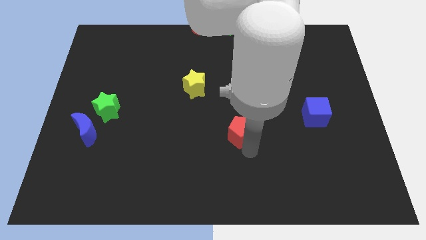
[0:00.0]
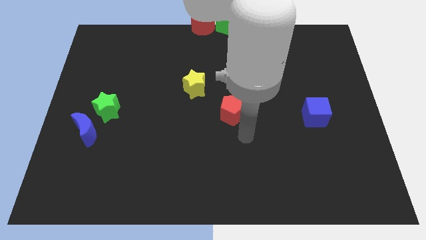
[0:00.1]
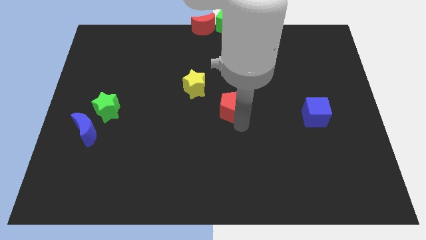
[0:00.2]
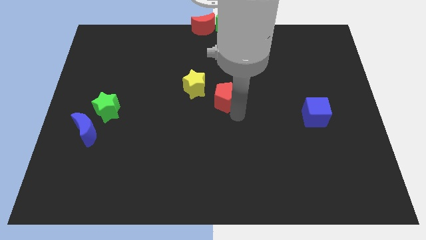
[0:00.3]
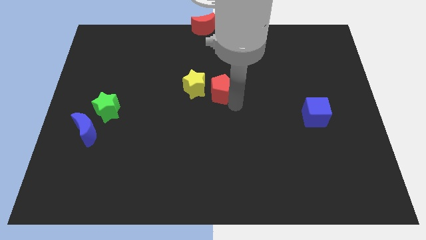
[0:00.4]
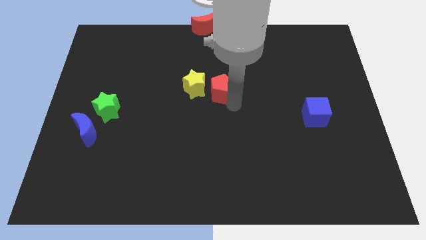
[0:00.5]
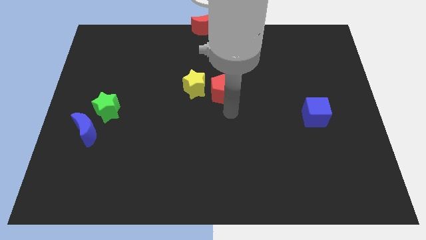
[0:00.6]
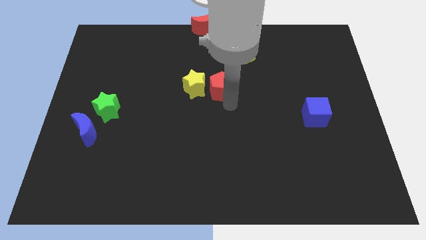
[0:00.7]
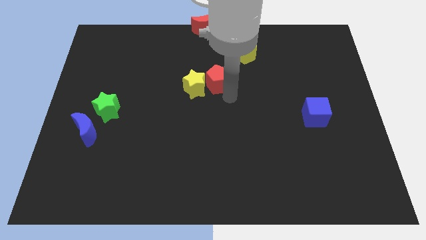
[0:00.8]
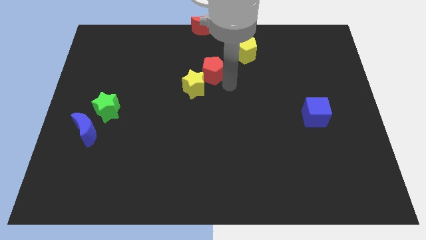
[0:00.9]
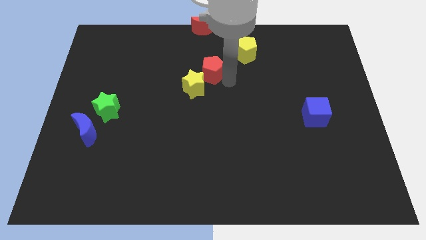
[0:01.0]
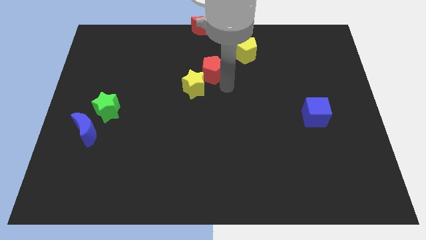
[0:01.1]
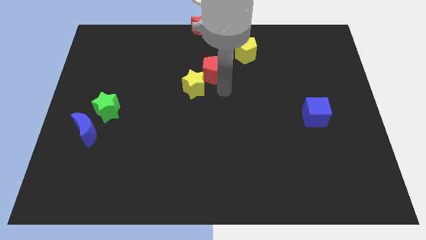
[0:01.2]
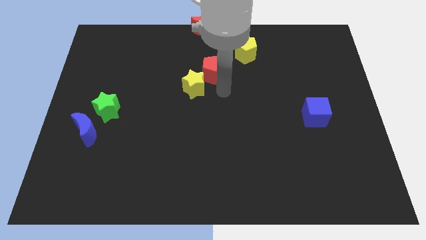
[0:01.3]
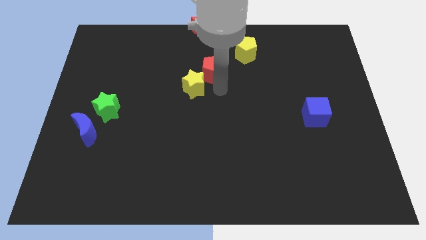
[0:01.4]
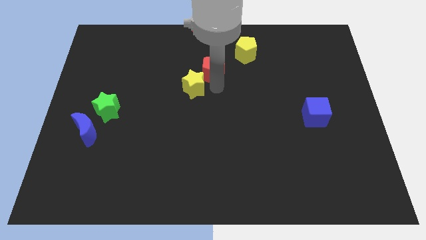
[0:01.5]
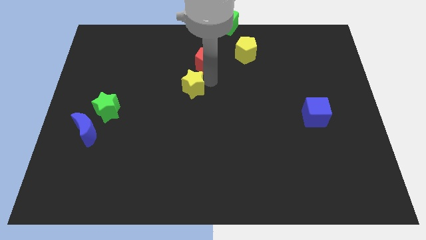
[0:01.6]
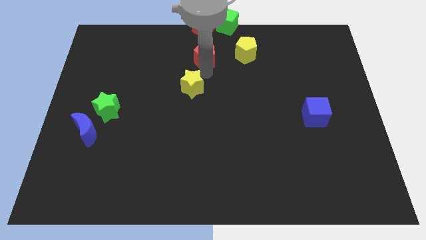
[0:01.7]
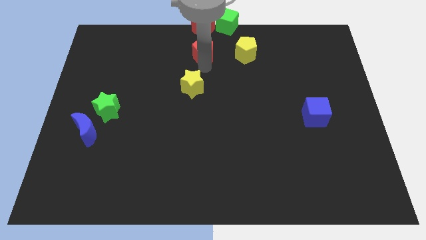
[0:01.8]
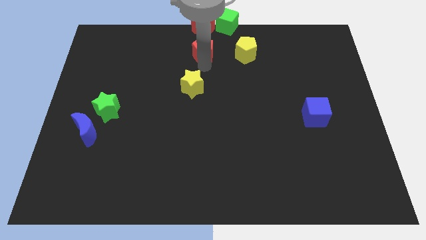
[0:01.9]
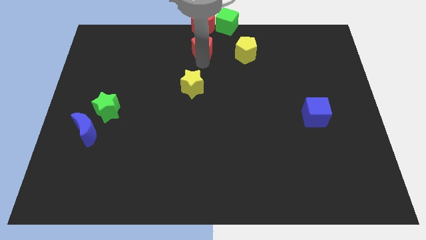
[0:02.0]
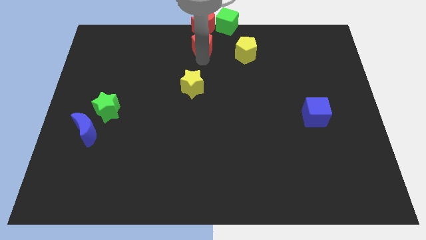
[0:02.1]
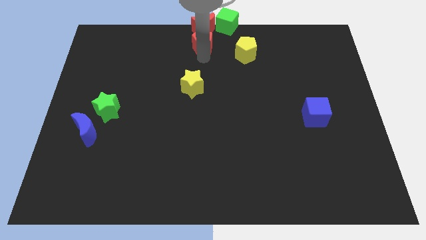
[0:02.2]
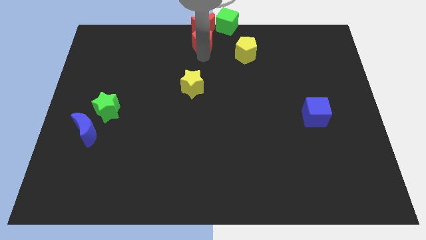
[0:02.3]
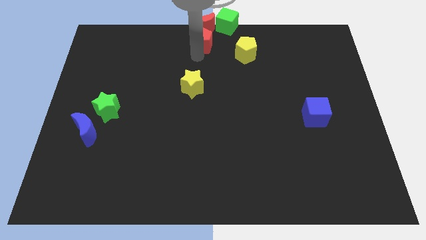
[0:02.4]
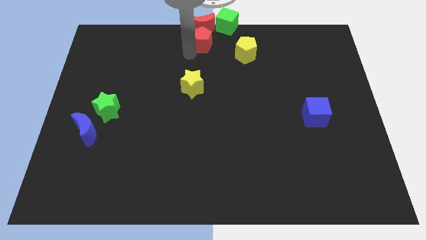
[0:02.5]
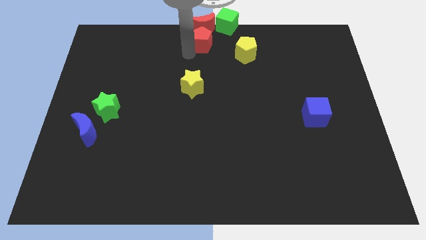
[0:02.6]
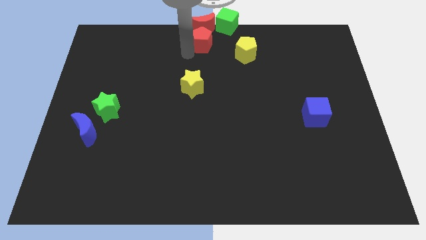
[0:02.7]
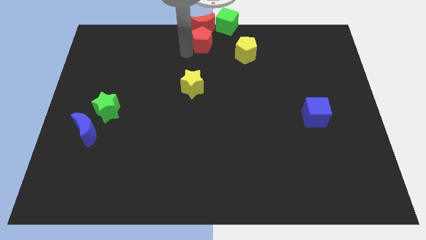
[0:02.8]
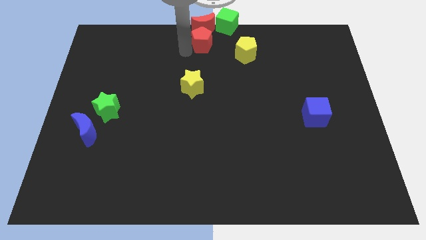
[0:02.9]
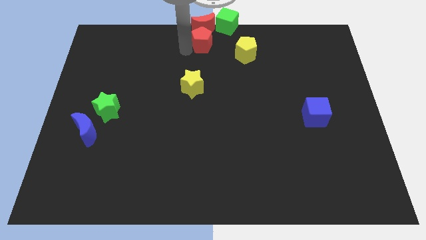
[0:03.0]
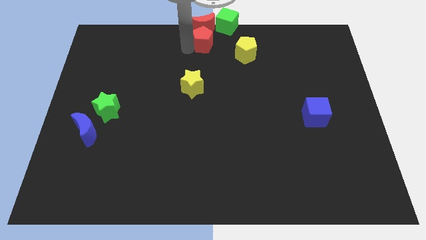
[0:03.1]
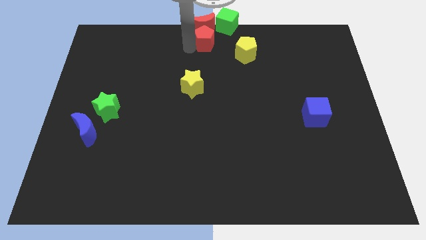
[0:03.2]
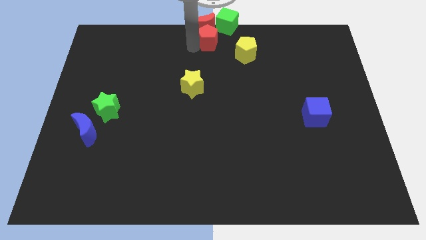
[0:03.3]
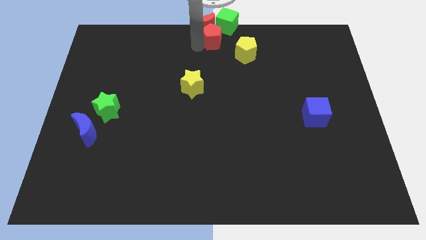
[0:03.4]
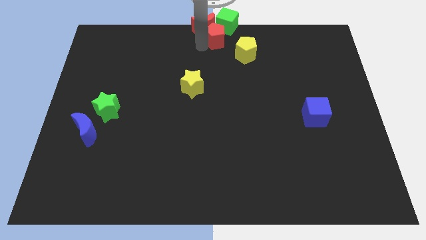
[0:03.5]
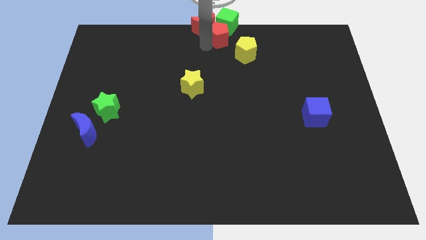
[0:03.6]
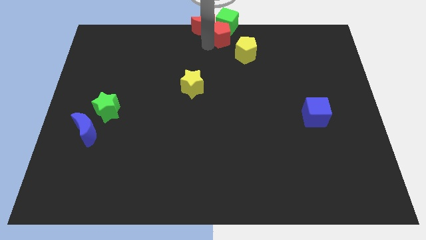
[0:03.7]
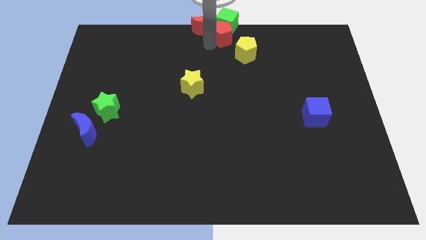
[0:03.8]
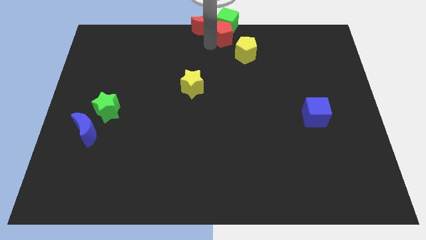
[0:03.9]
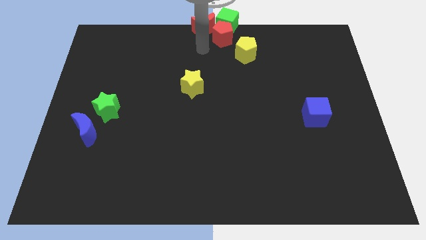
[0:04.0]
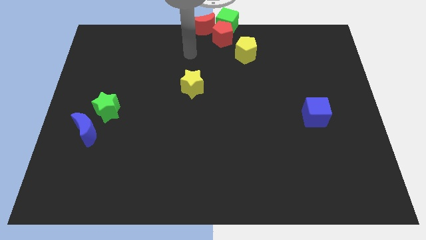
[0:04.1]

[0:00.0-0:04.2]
place the red pentagon in between the yellow pentagon and the red moon

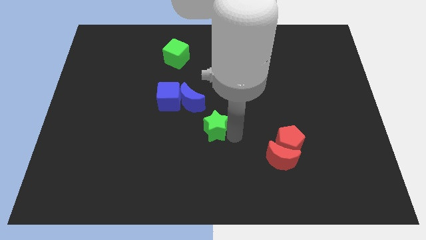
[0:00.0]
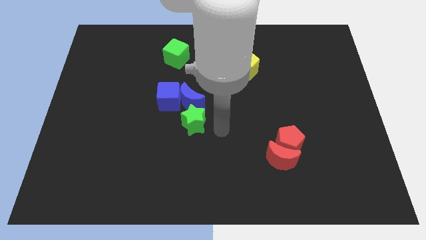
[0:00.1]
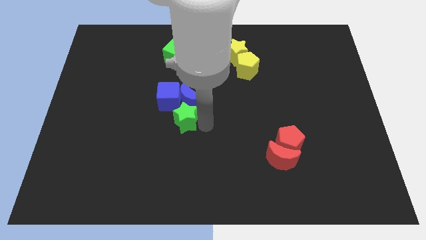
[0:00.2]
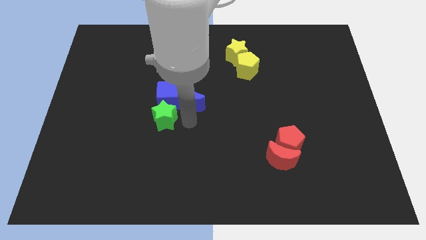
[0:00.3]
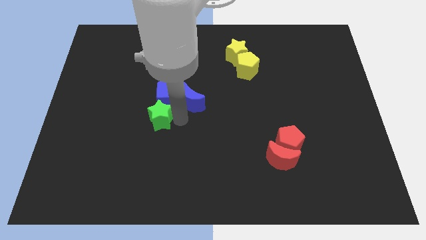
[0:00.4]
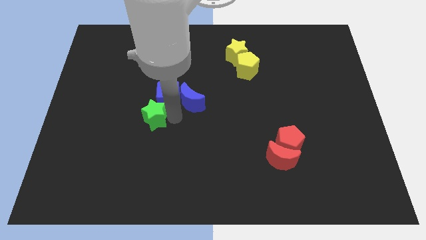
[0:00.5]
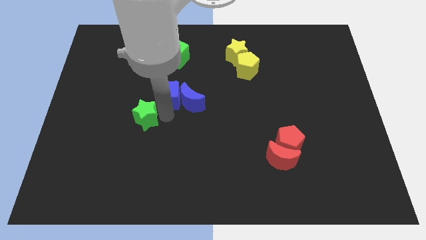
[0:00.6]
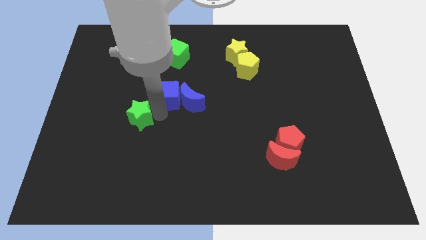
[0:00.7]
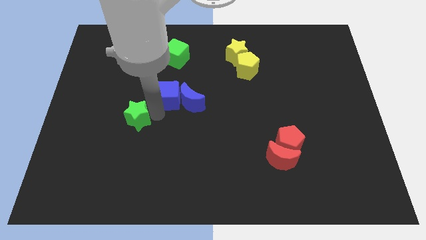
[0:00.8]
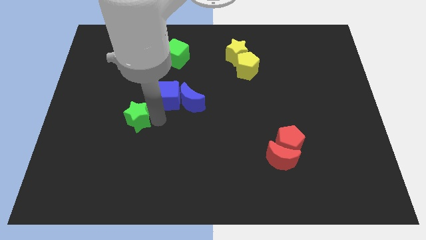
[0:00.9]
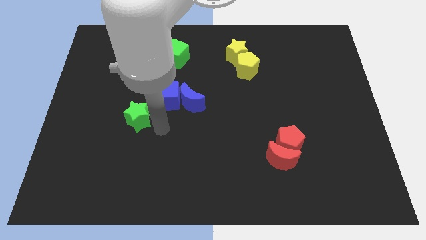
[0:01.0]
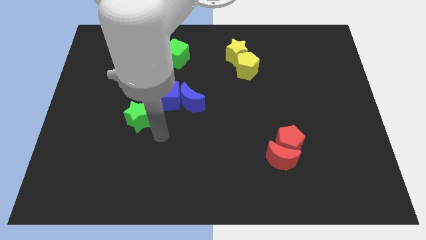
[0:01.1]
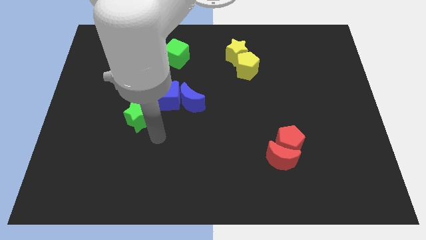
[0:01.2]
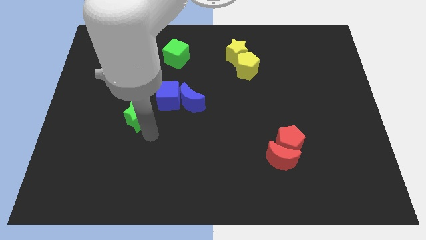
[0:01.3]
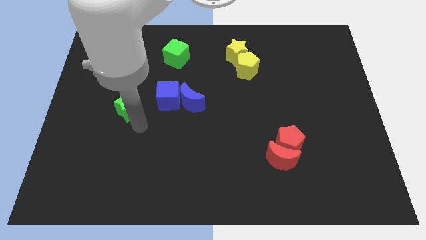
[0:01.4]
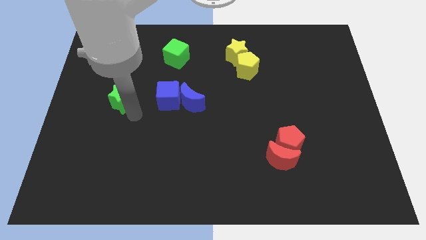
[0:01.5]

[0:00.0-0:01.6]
move green star away from blue moon

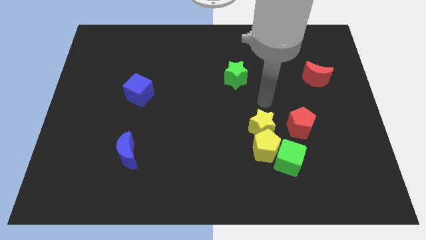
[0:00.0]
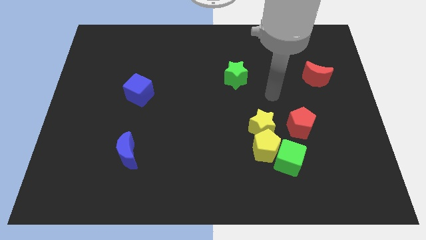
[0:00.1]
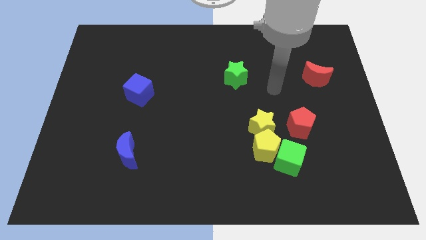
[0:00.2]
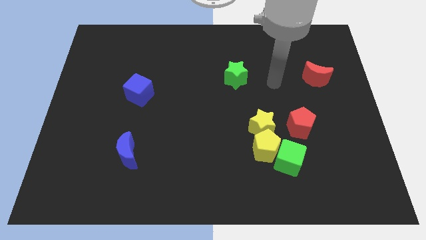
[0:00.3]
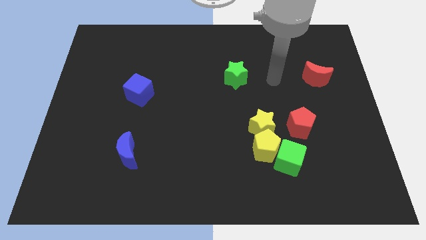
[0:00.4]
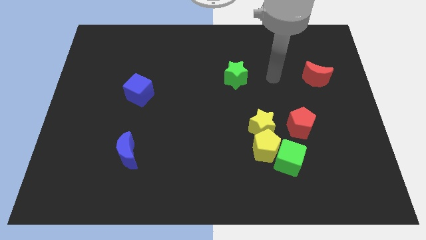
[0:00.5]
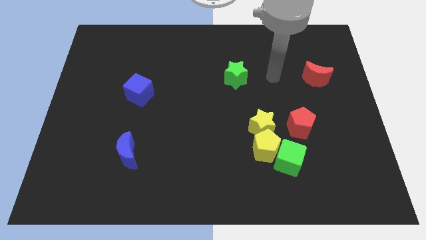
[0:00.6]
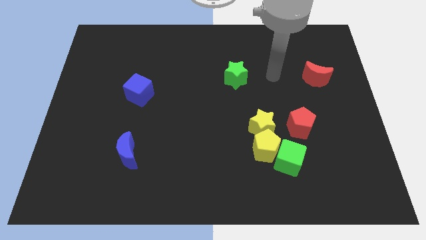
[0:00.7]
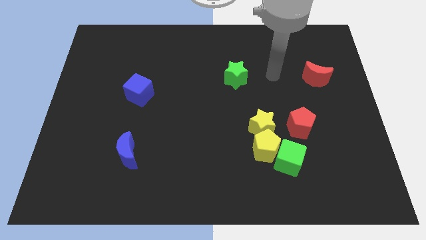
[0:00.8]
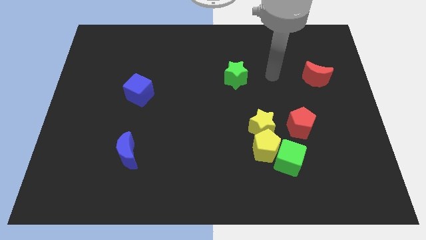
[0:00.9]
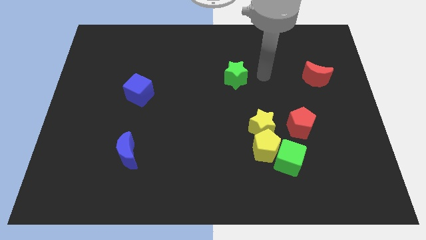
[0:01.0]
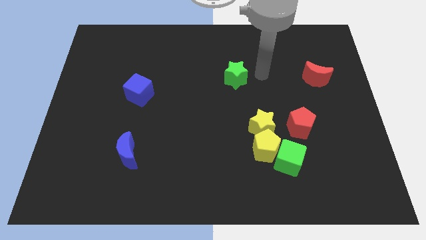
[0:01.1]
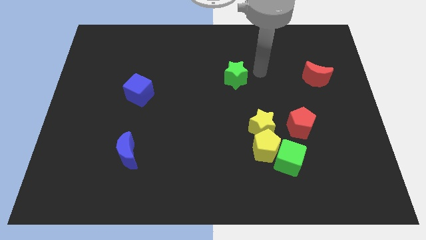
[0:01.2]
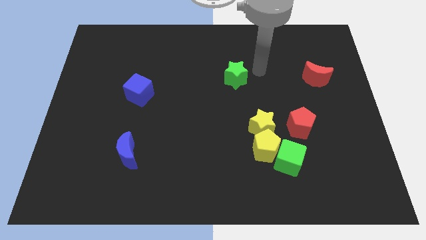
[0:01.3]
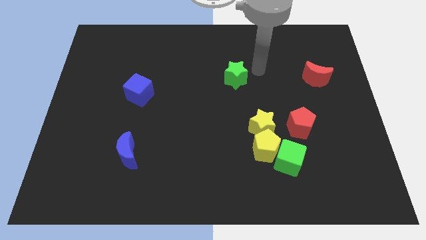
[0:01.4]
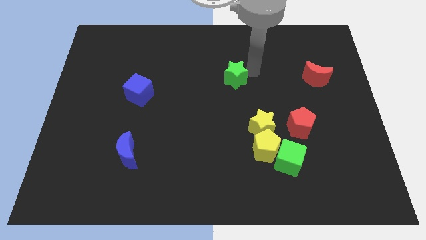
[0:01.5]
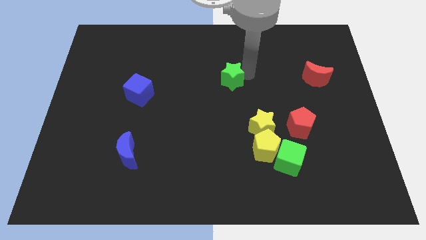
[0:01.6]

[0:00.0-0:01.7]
place your arm to right of the green star

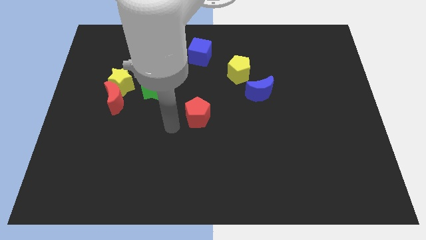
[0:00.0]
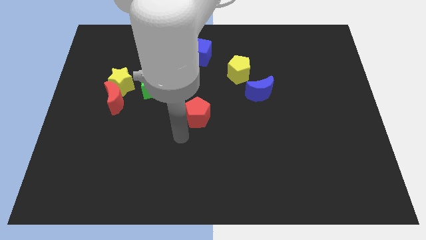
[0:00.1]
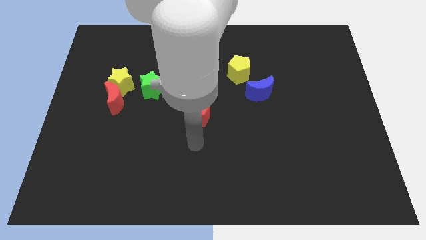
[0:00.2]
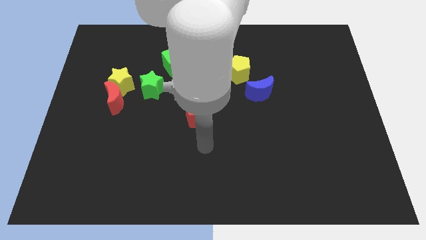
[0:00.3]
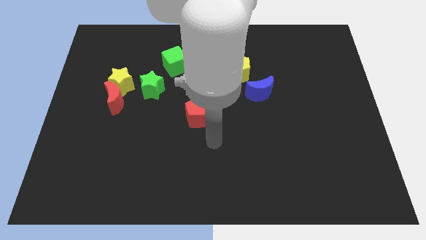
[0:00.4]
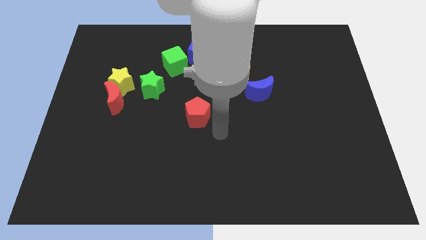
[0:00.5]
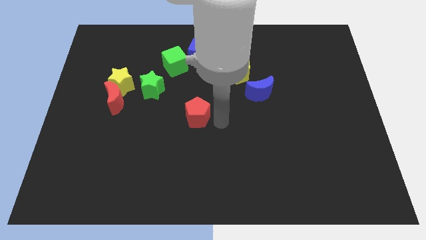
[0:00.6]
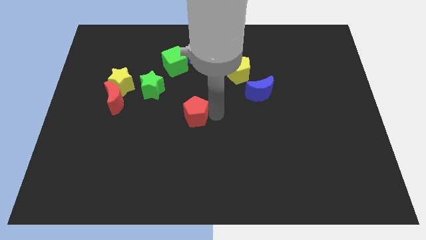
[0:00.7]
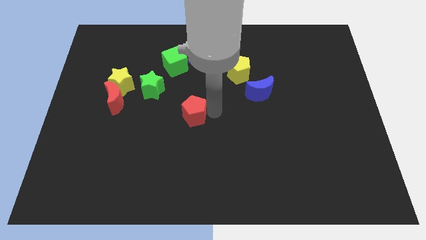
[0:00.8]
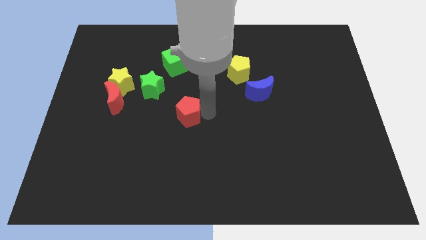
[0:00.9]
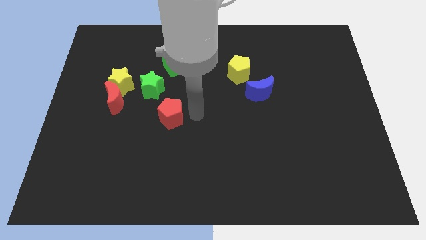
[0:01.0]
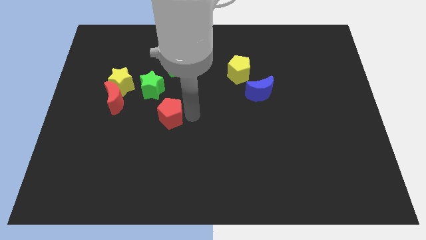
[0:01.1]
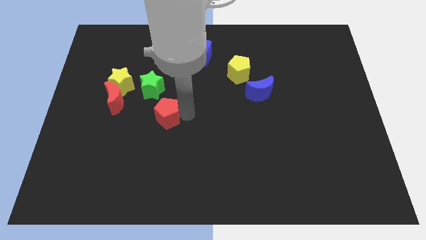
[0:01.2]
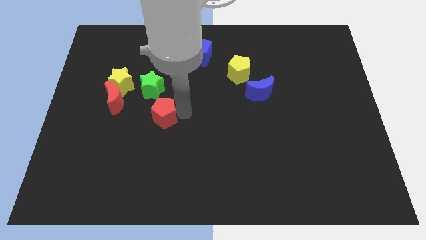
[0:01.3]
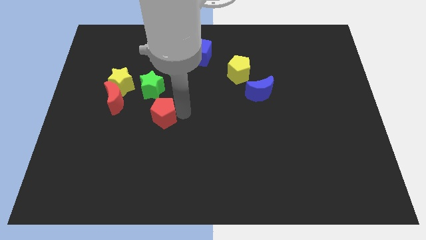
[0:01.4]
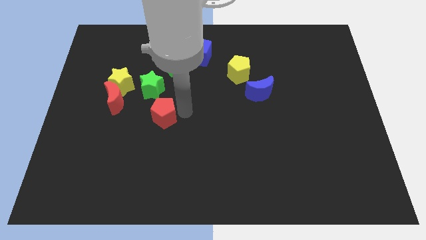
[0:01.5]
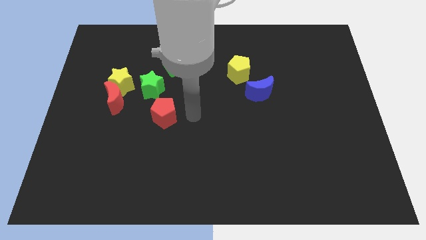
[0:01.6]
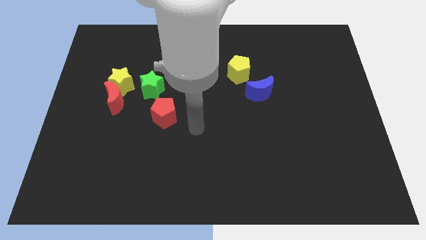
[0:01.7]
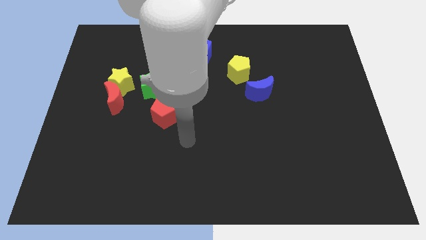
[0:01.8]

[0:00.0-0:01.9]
place the red pentagon diagonally bottom left to the yellow pentagon
